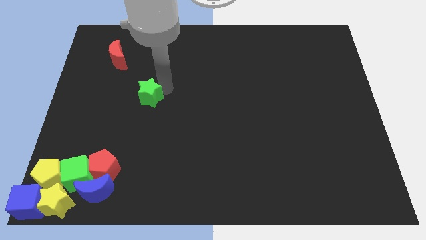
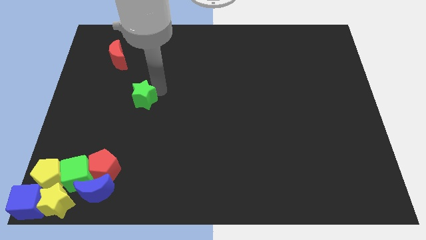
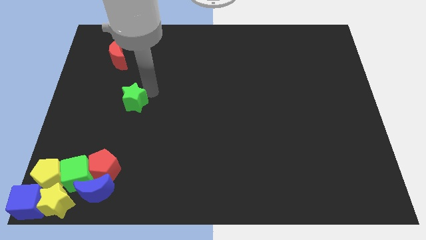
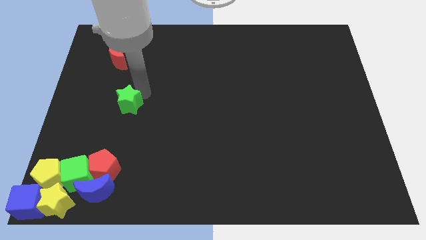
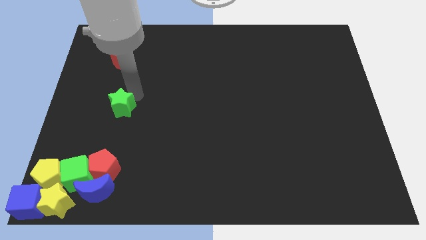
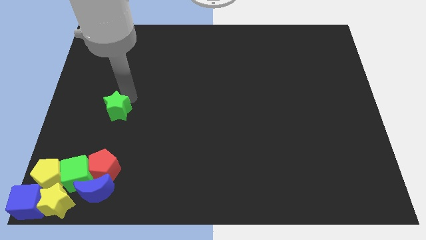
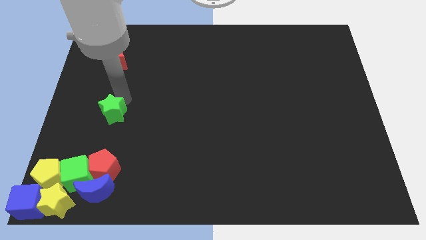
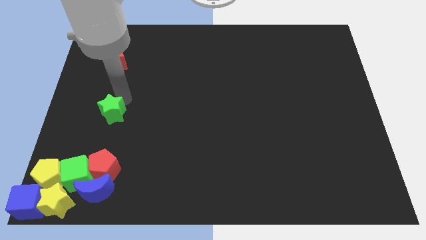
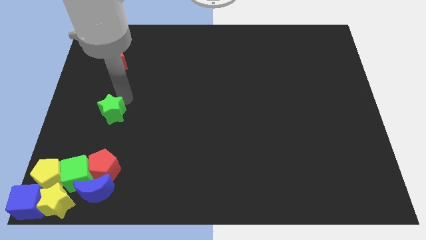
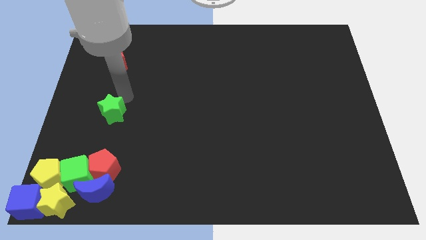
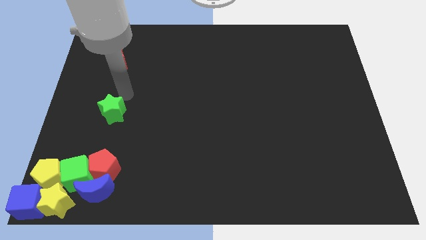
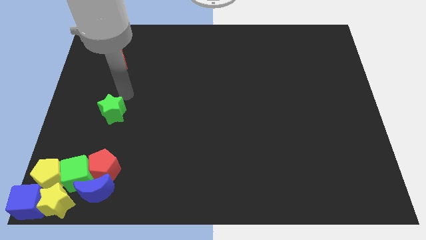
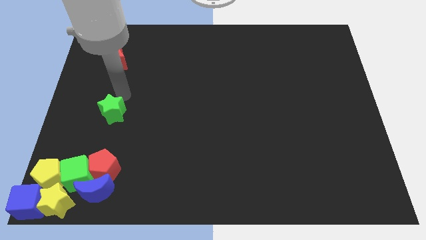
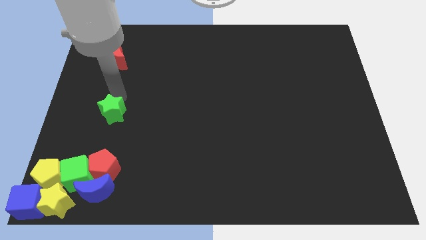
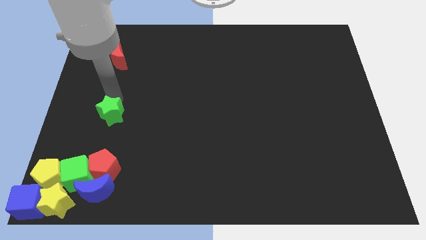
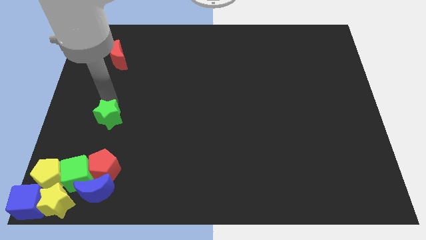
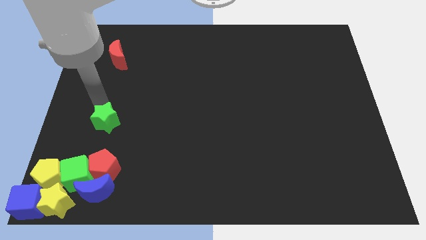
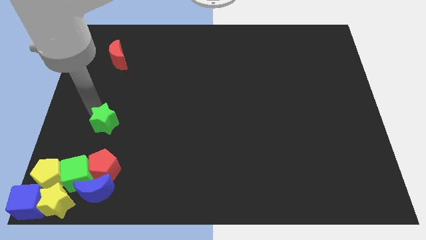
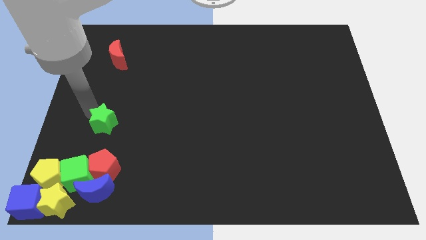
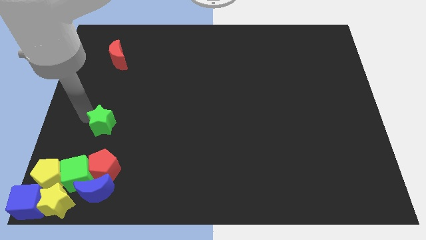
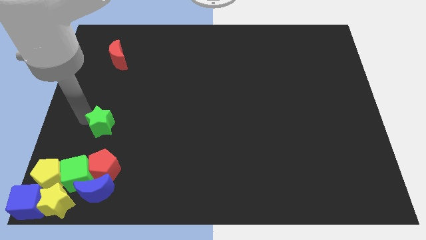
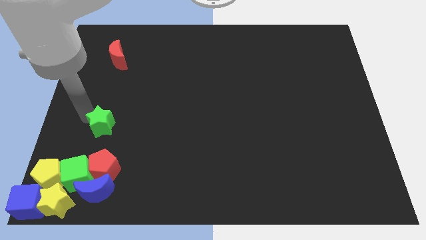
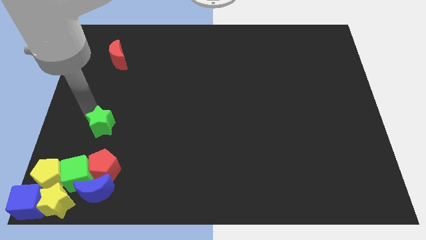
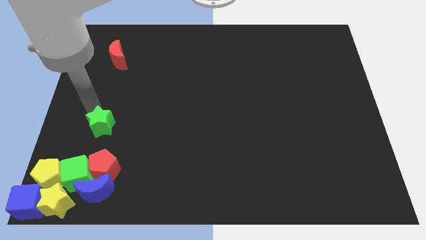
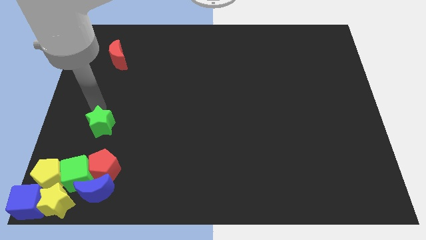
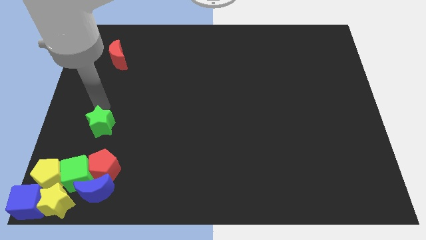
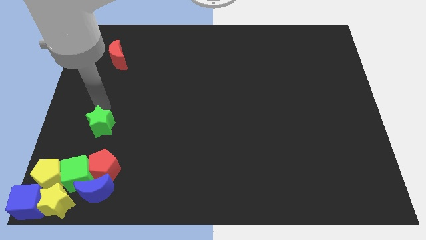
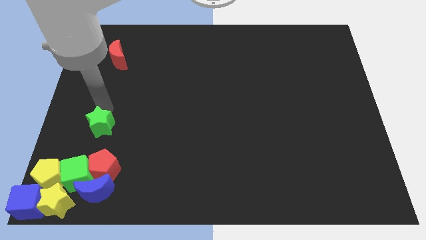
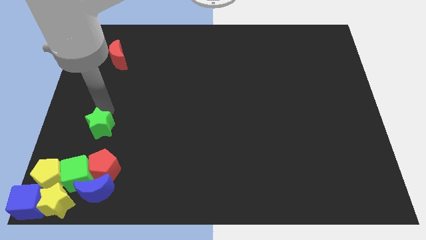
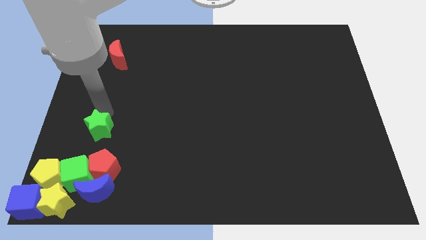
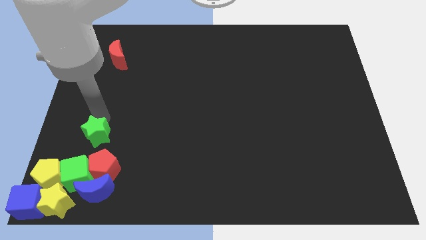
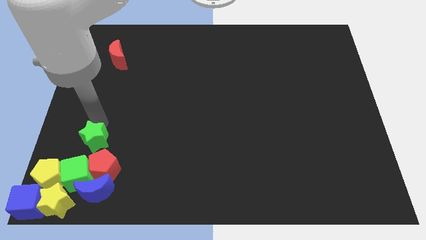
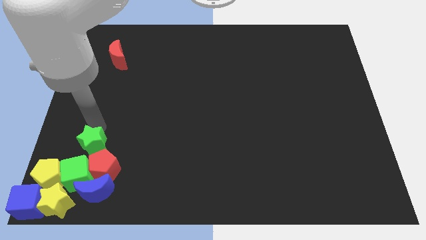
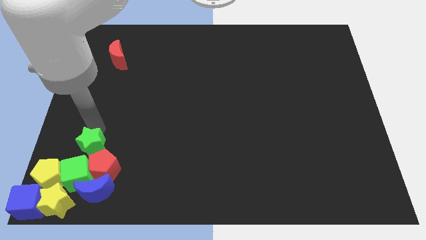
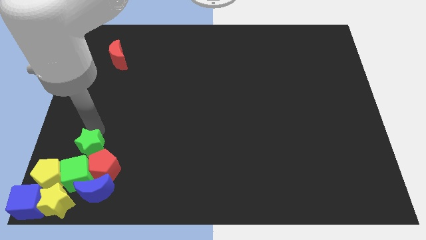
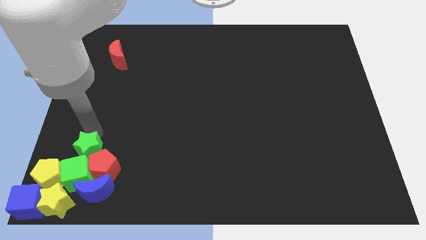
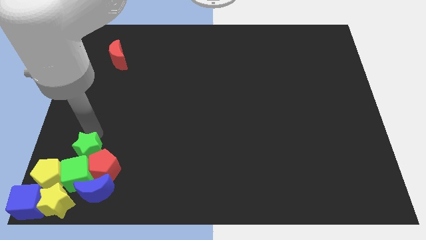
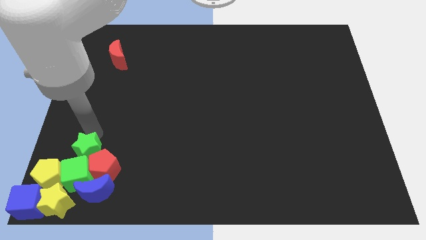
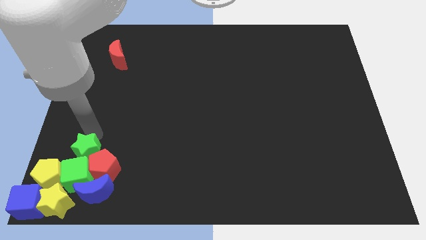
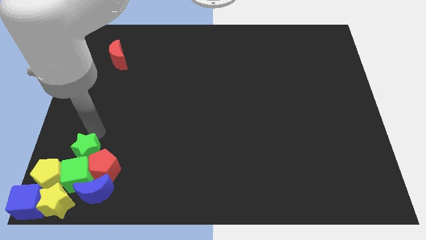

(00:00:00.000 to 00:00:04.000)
push the green star into the green cube

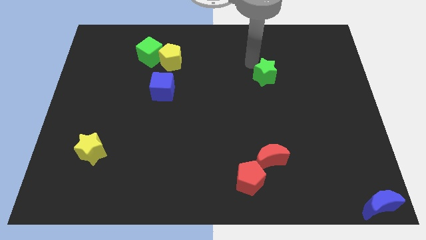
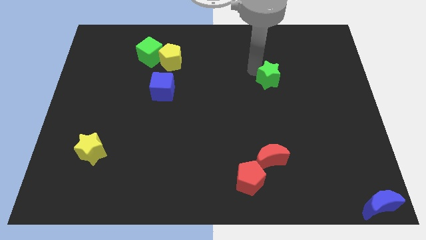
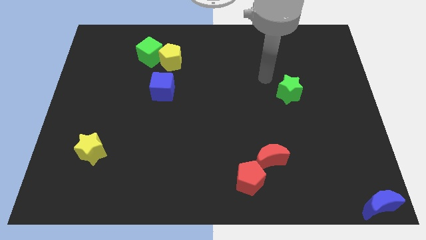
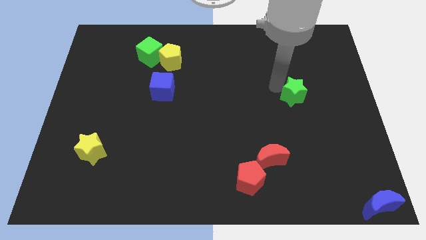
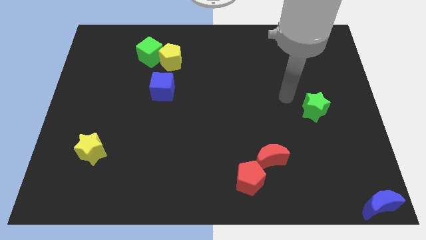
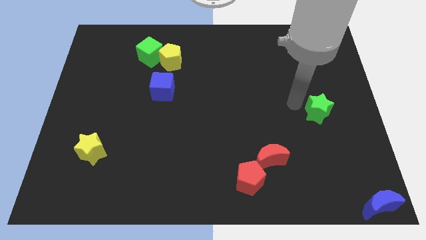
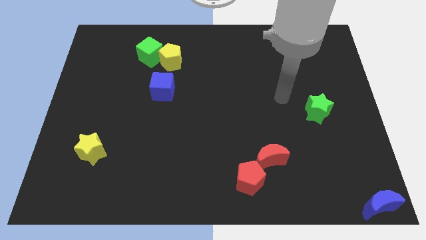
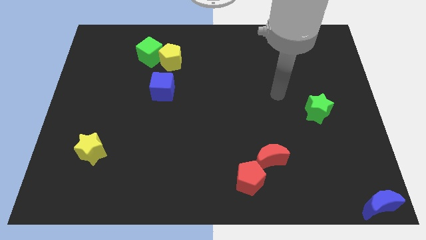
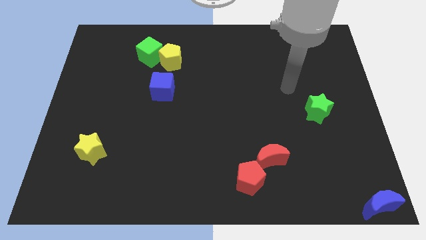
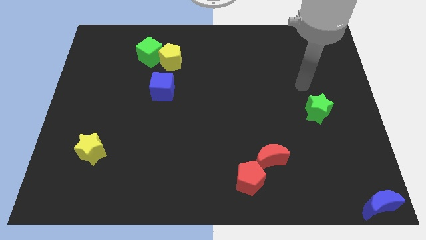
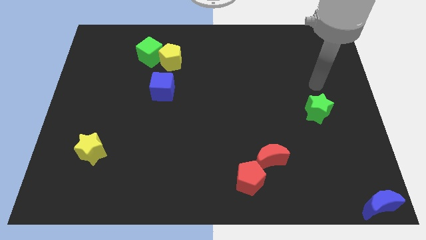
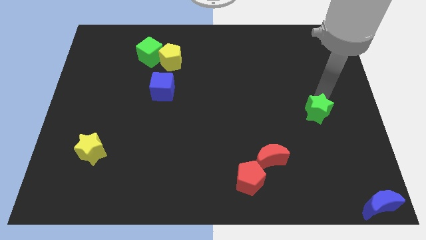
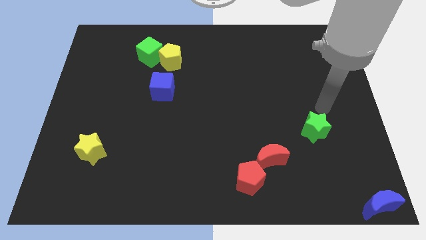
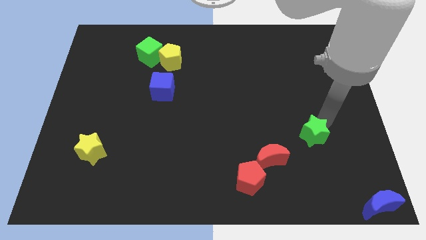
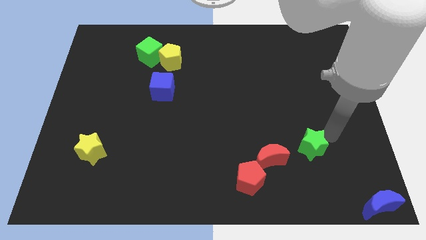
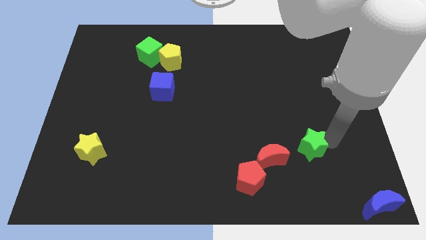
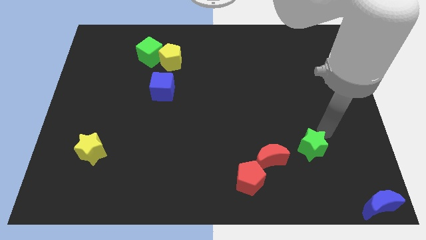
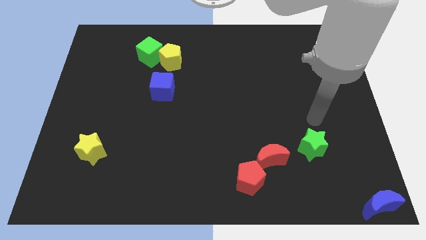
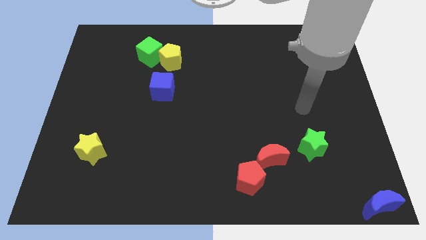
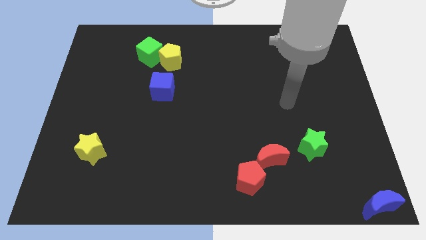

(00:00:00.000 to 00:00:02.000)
push the green star towards the blue crescent

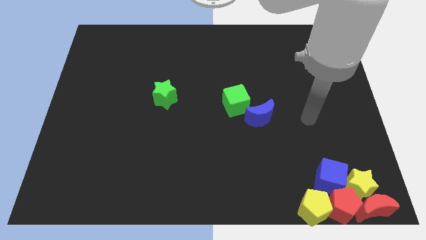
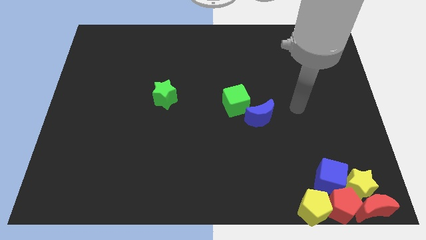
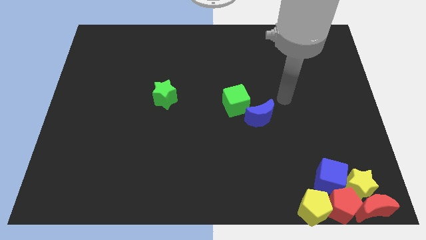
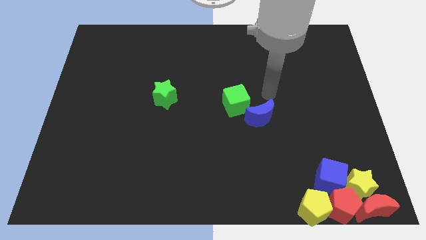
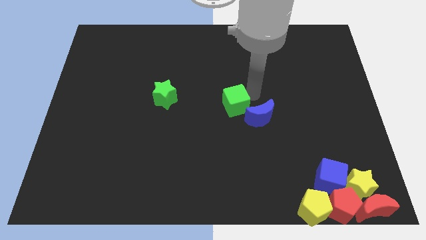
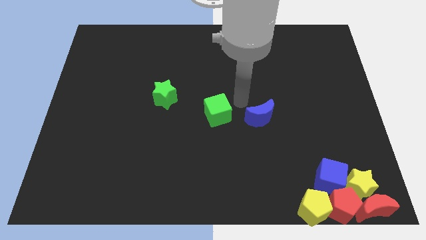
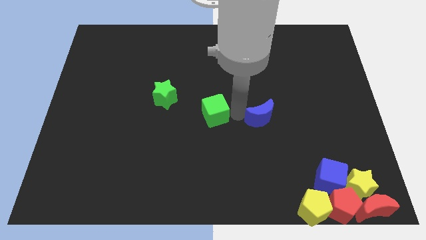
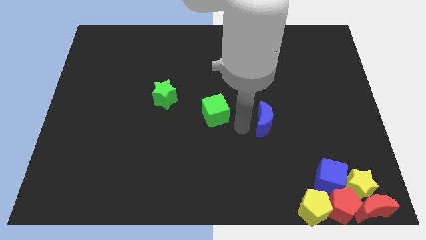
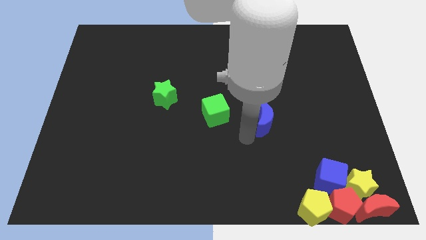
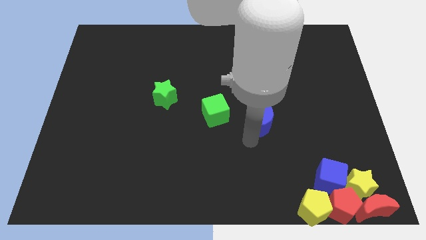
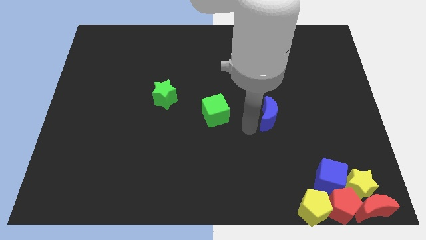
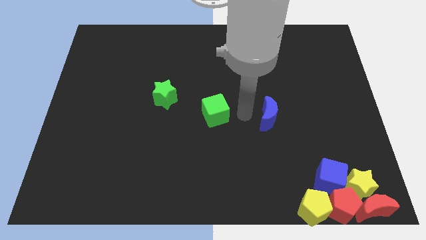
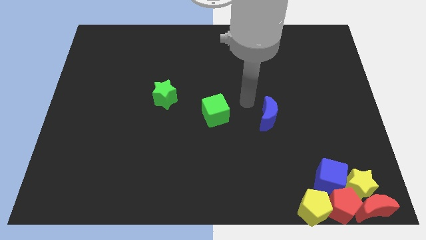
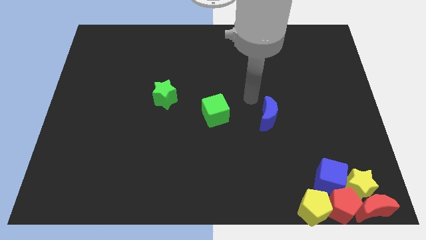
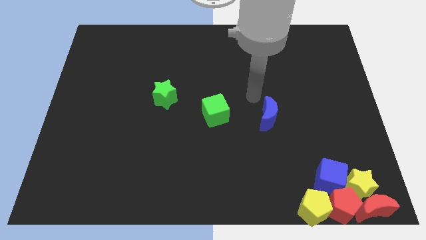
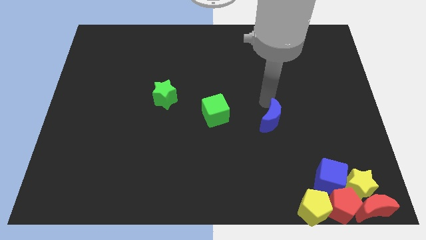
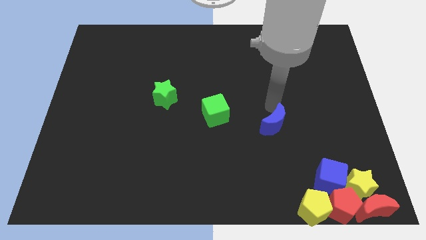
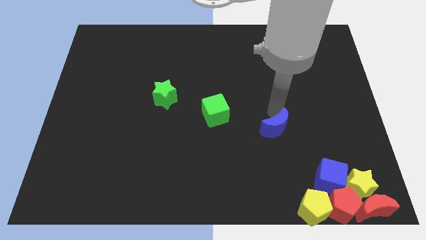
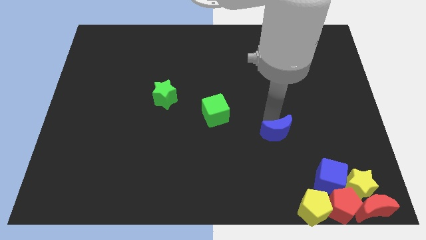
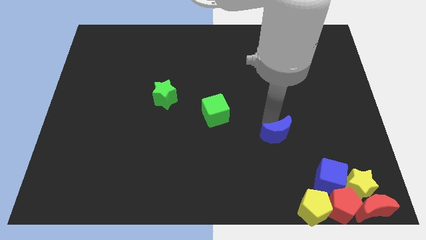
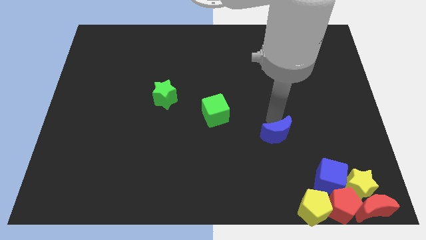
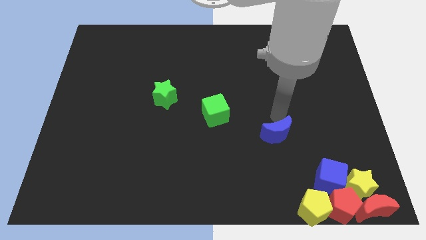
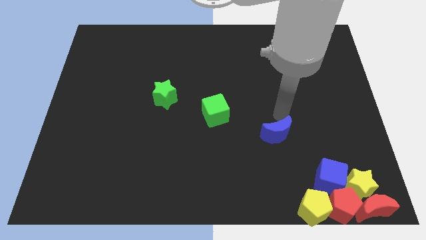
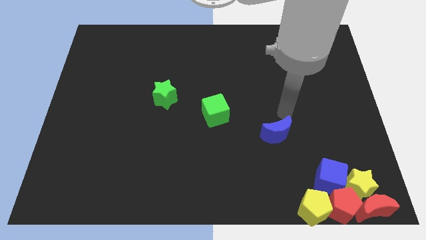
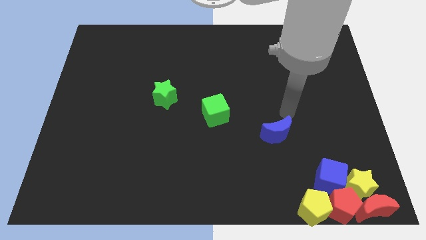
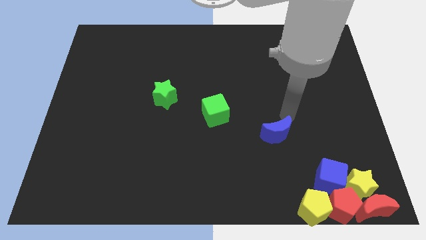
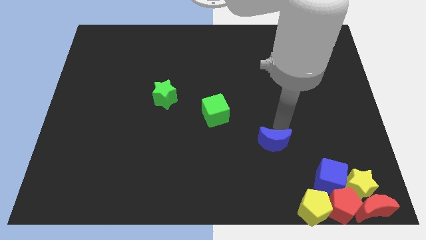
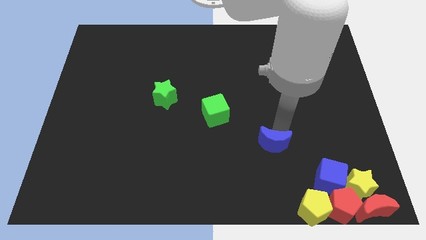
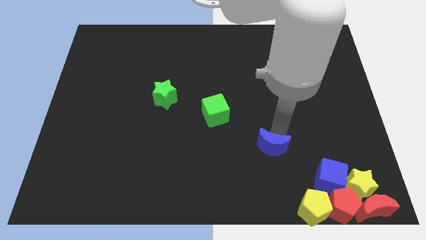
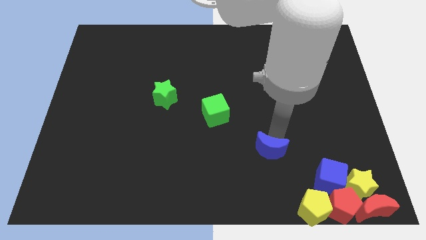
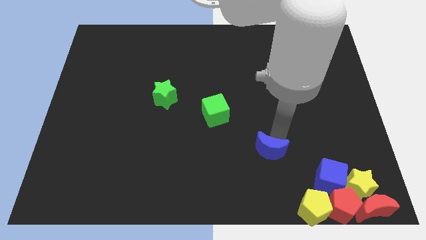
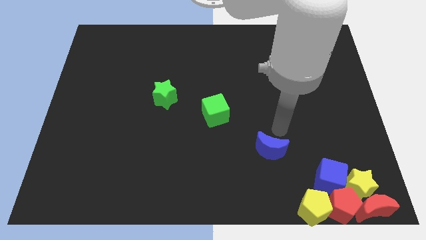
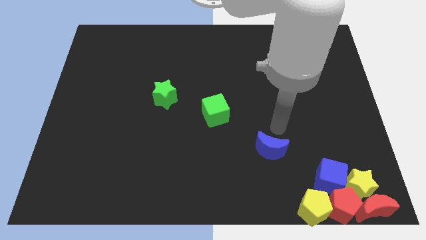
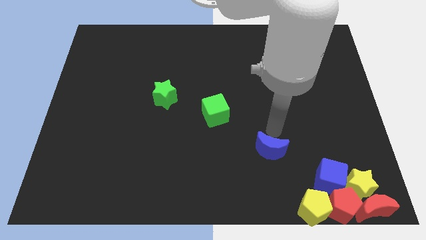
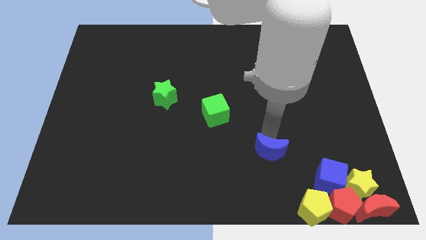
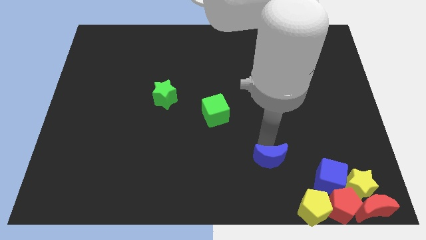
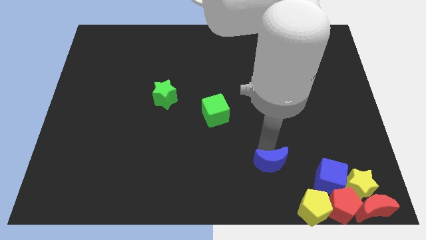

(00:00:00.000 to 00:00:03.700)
slide the blue moon and the green cube diagonal to each other
